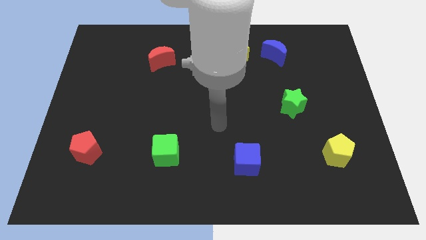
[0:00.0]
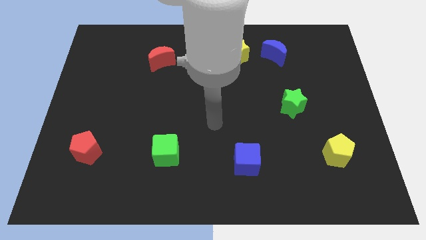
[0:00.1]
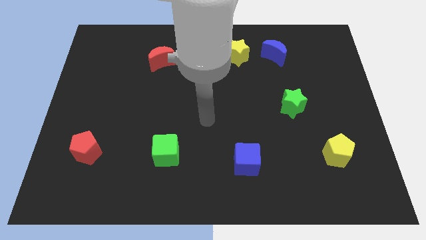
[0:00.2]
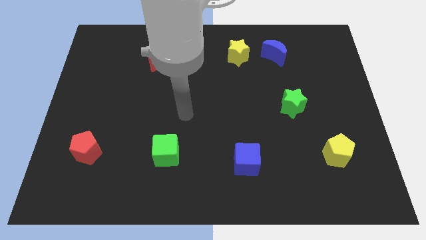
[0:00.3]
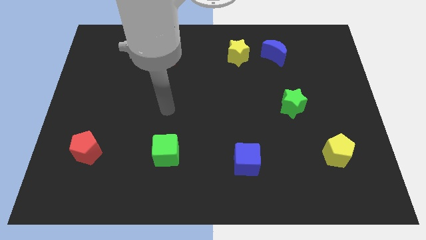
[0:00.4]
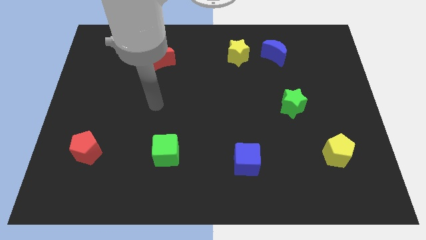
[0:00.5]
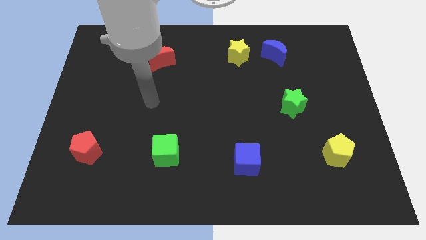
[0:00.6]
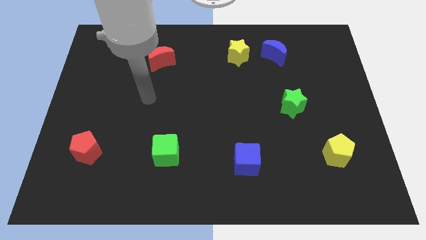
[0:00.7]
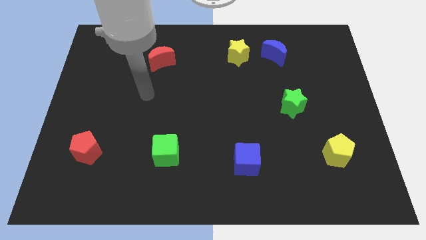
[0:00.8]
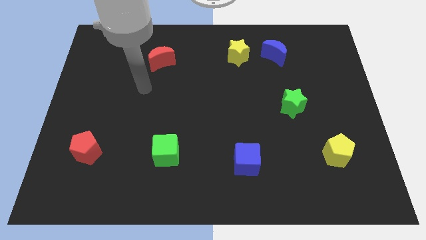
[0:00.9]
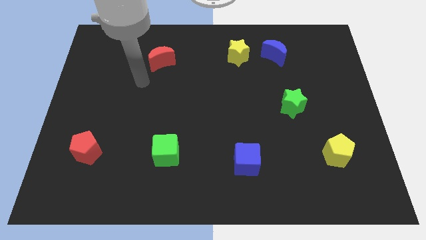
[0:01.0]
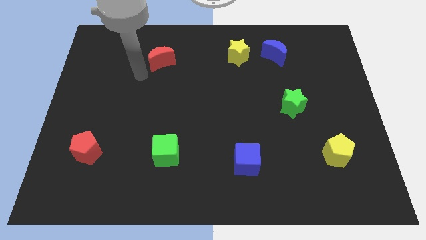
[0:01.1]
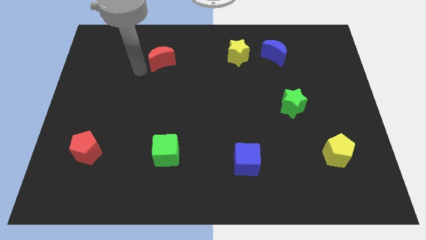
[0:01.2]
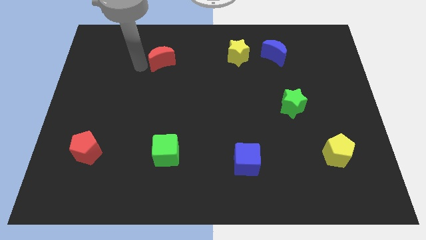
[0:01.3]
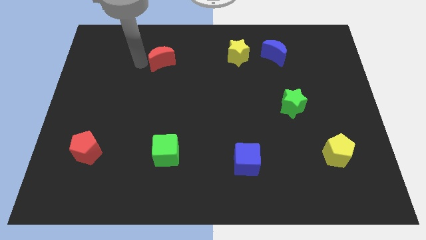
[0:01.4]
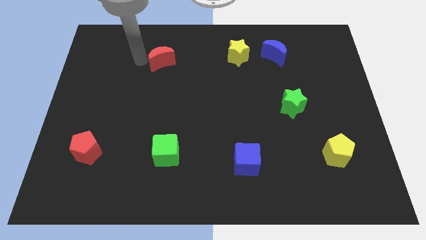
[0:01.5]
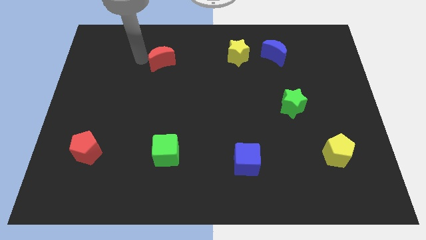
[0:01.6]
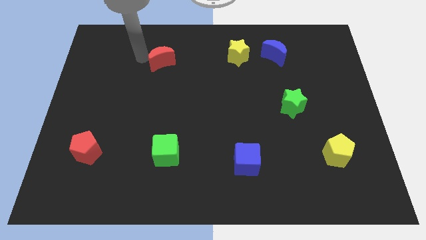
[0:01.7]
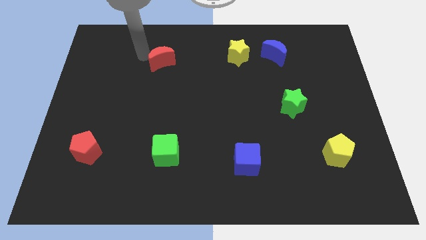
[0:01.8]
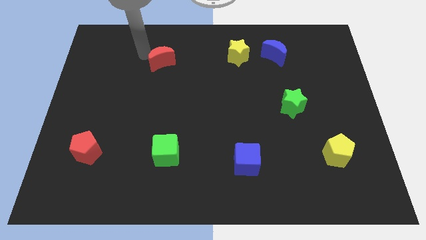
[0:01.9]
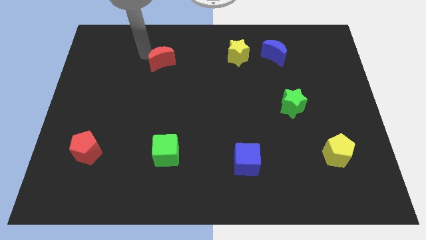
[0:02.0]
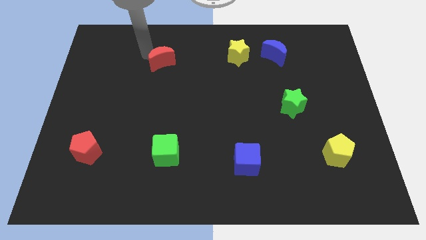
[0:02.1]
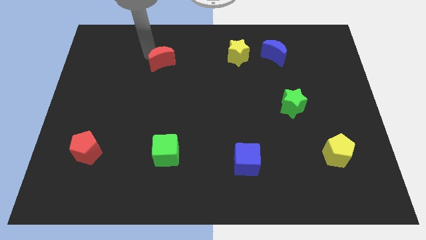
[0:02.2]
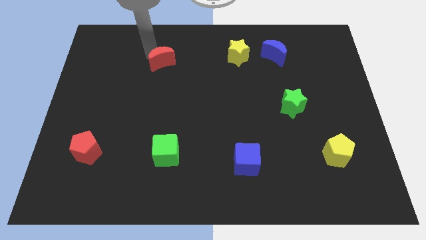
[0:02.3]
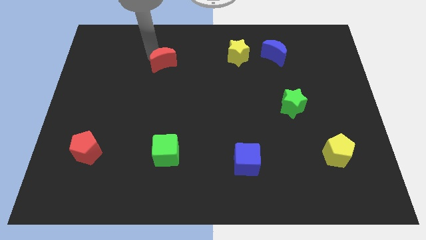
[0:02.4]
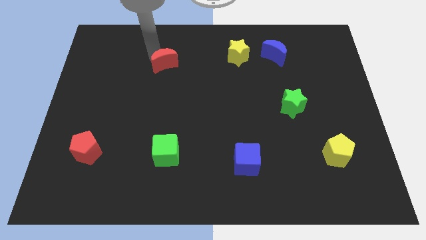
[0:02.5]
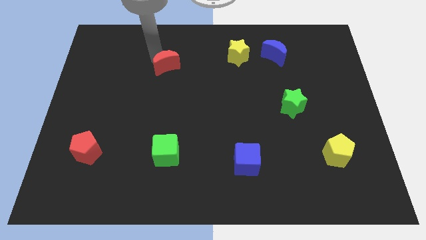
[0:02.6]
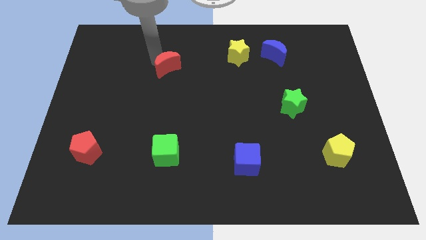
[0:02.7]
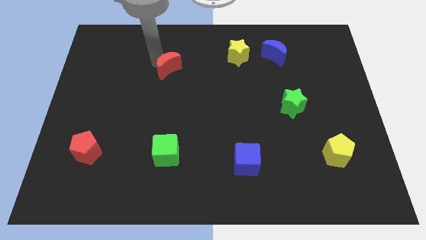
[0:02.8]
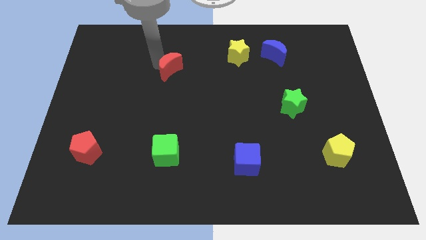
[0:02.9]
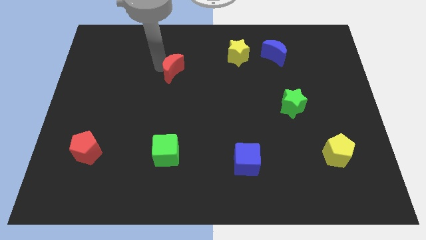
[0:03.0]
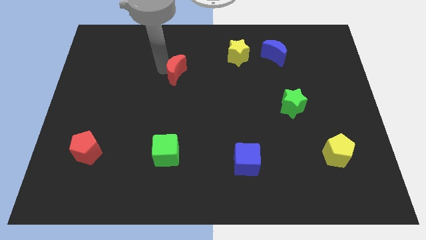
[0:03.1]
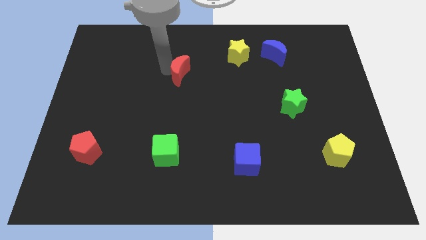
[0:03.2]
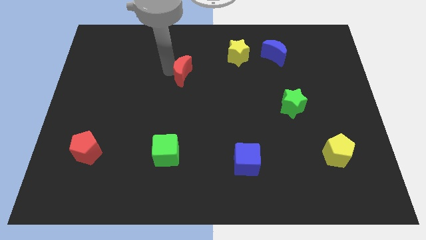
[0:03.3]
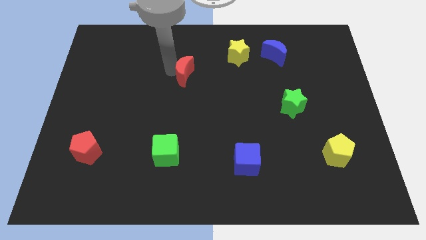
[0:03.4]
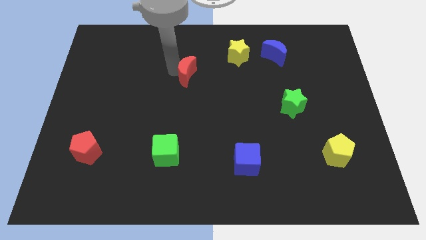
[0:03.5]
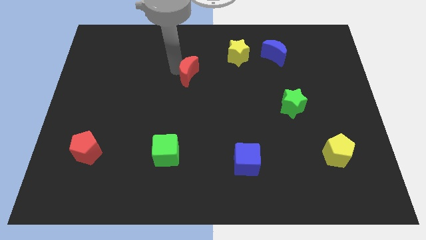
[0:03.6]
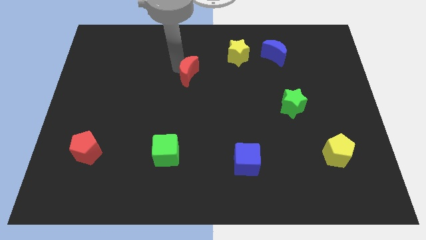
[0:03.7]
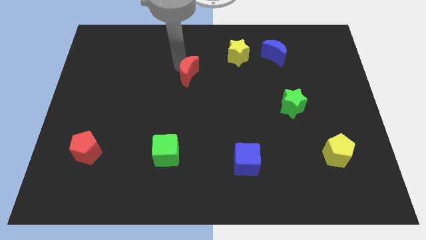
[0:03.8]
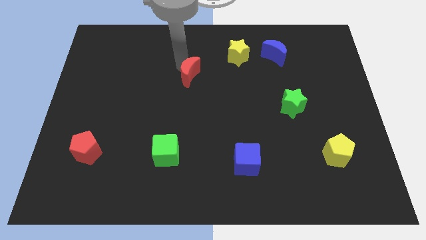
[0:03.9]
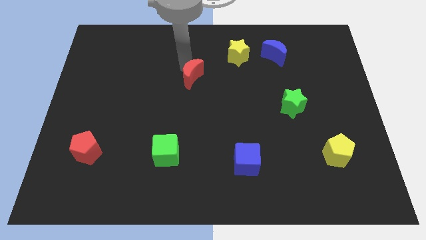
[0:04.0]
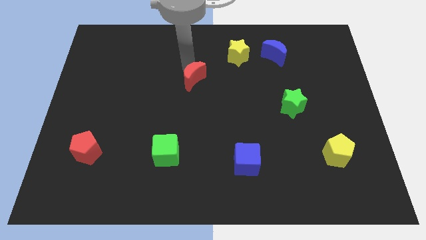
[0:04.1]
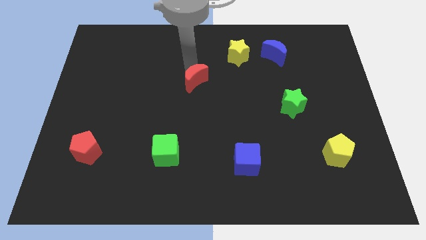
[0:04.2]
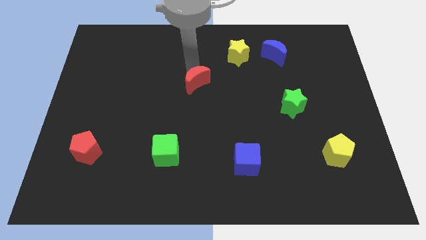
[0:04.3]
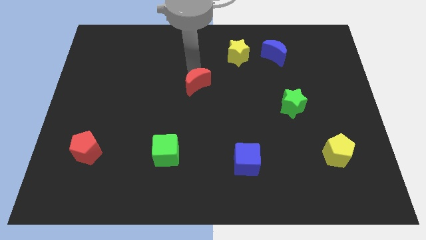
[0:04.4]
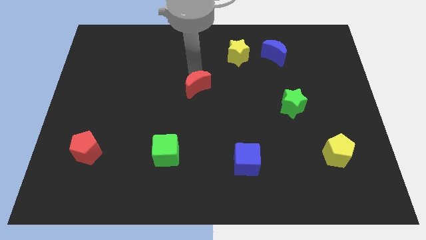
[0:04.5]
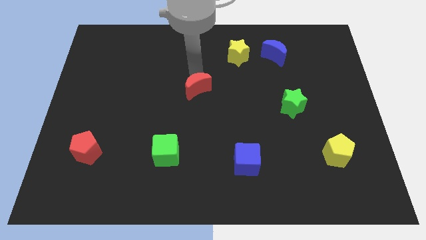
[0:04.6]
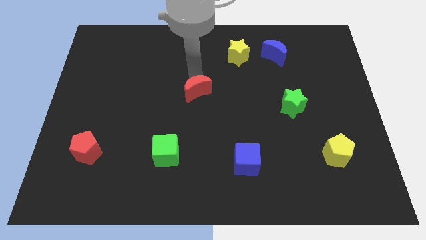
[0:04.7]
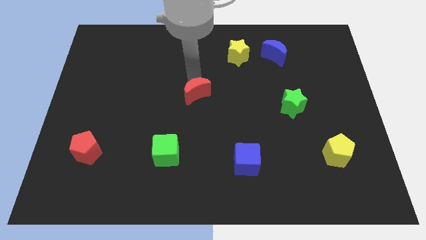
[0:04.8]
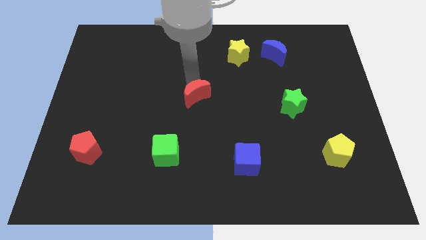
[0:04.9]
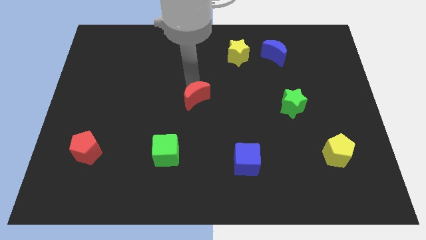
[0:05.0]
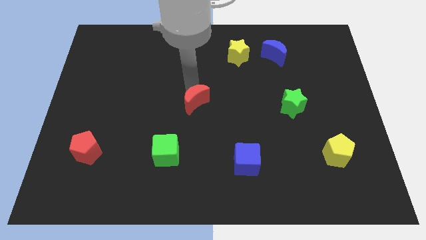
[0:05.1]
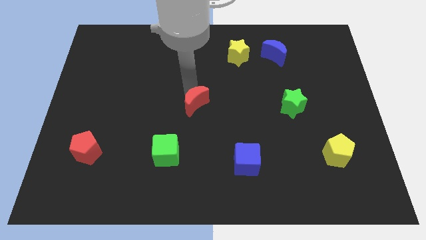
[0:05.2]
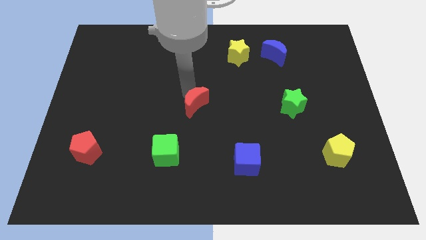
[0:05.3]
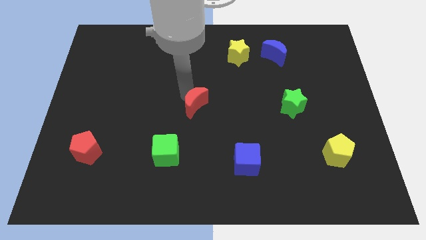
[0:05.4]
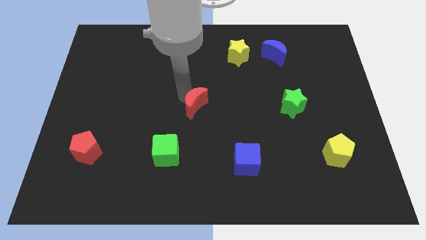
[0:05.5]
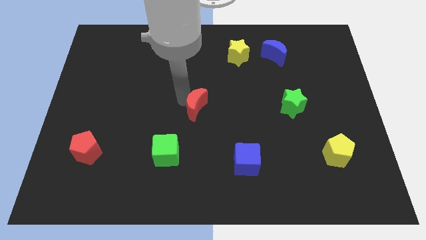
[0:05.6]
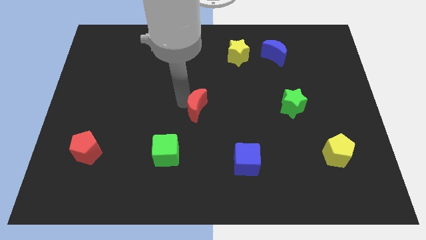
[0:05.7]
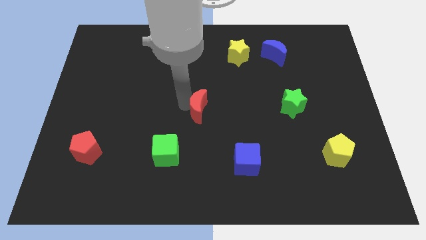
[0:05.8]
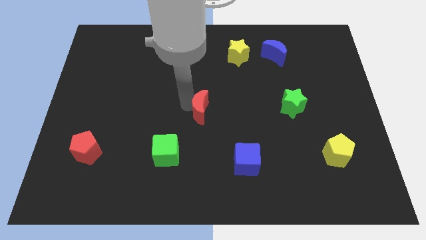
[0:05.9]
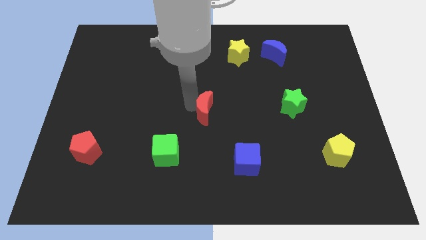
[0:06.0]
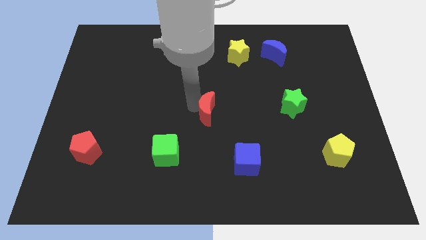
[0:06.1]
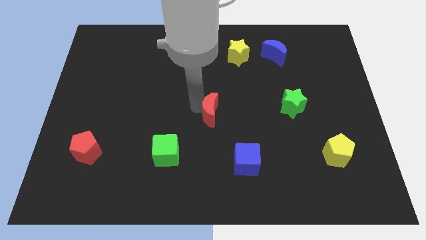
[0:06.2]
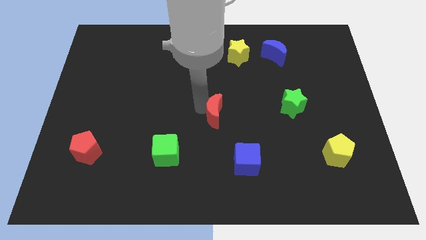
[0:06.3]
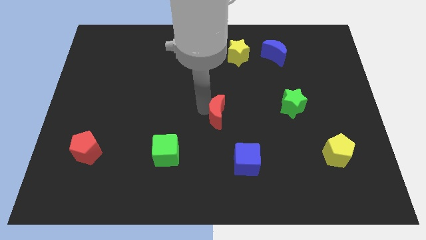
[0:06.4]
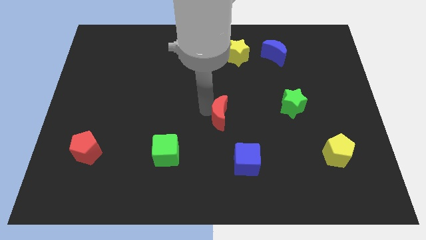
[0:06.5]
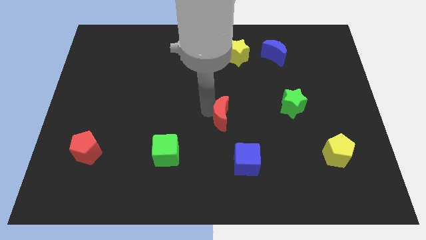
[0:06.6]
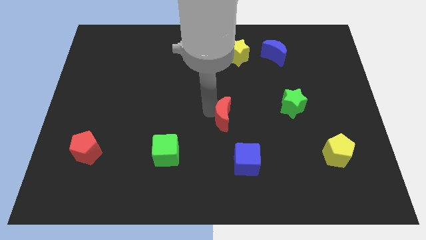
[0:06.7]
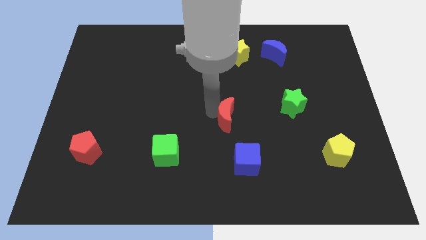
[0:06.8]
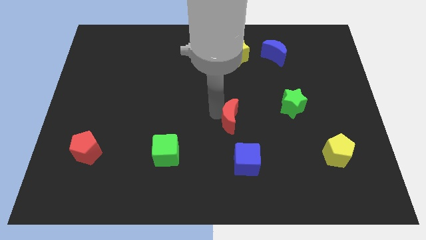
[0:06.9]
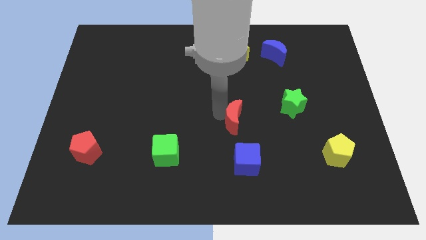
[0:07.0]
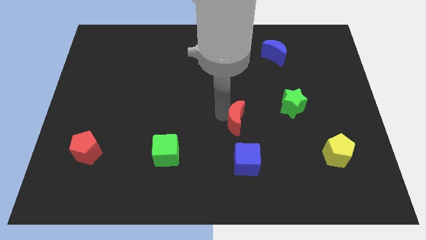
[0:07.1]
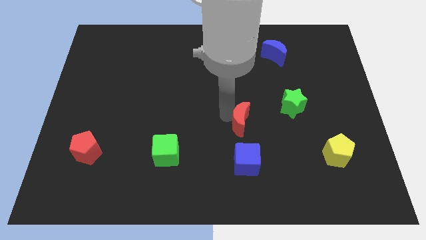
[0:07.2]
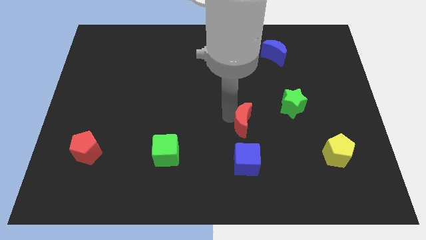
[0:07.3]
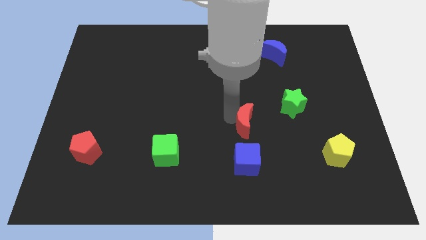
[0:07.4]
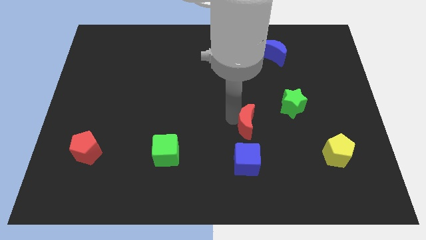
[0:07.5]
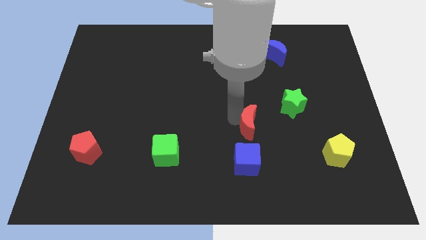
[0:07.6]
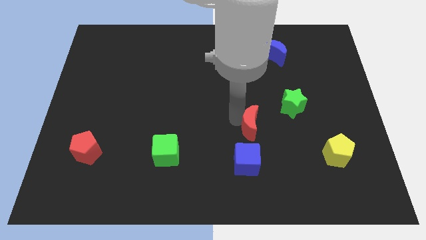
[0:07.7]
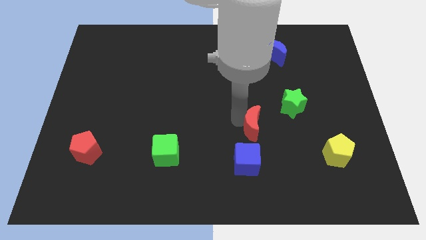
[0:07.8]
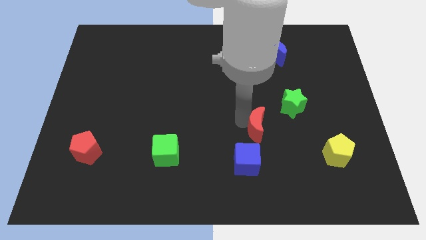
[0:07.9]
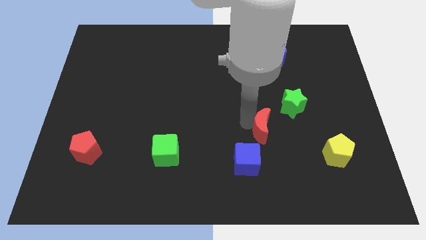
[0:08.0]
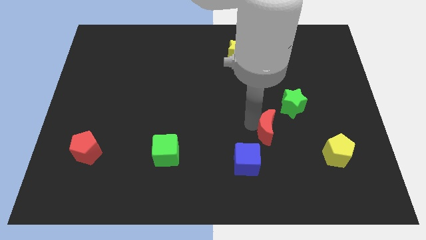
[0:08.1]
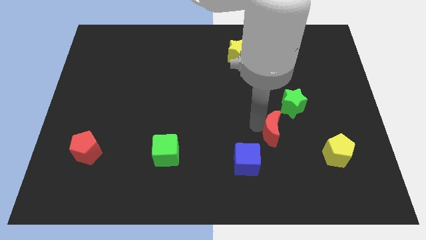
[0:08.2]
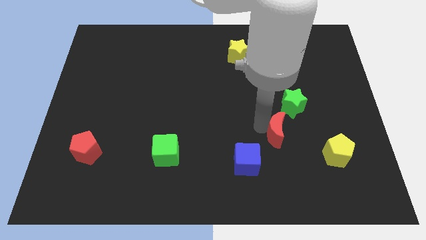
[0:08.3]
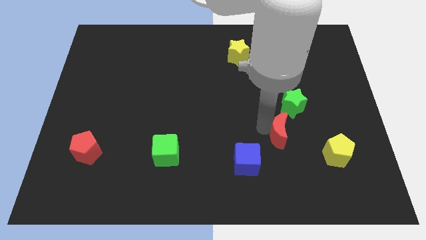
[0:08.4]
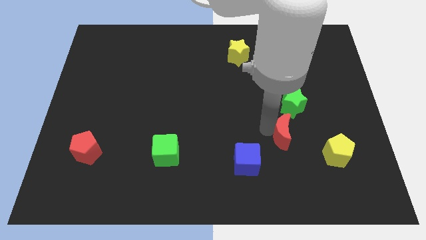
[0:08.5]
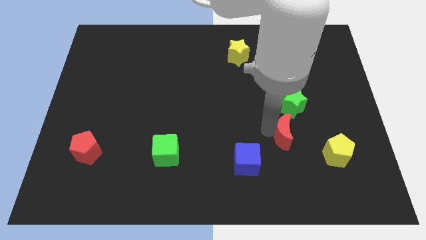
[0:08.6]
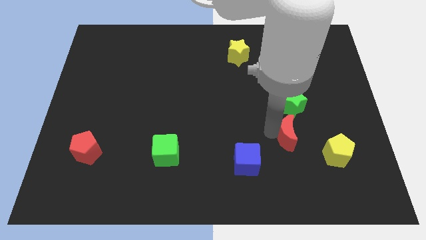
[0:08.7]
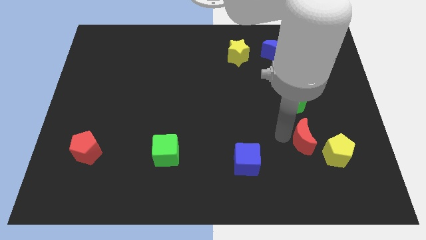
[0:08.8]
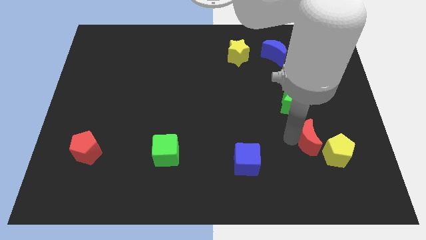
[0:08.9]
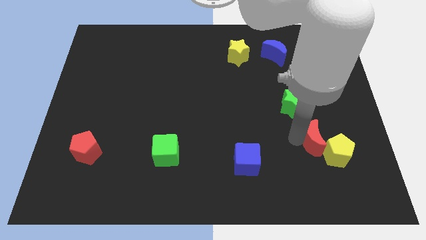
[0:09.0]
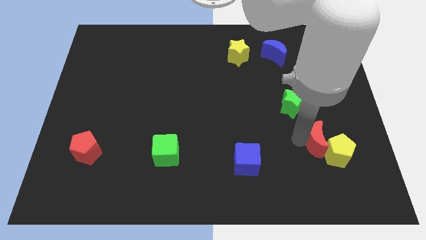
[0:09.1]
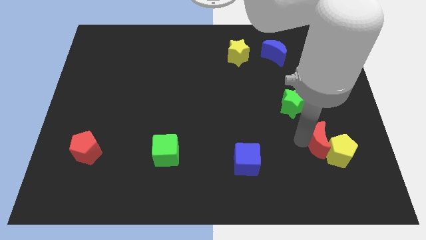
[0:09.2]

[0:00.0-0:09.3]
move the red moon close to the yellow pentagon
